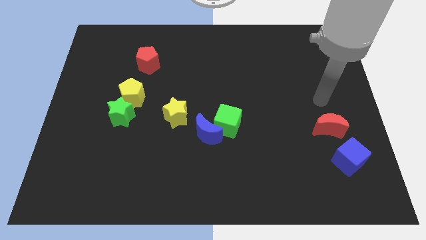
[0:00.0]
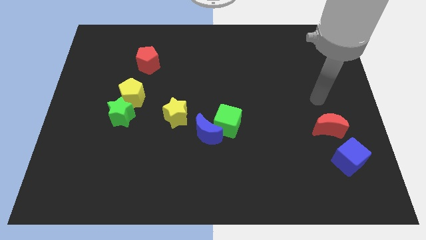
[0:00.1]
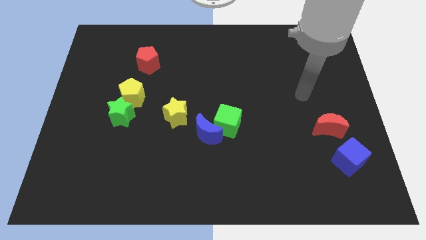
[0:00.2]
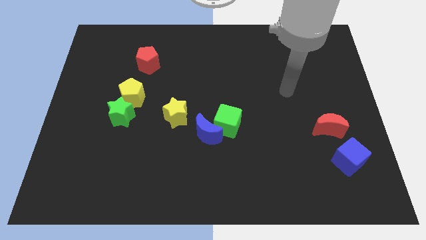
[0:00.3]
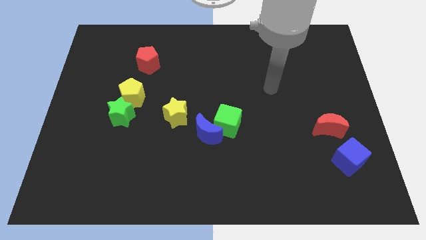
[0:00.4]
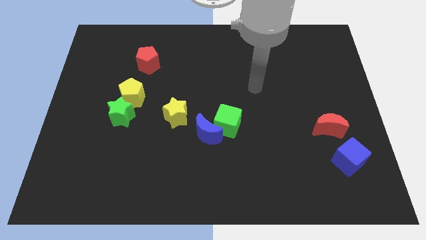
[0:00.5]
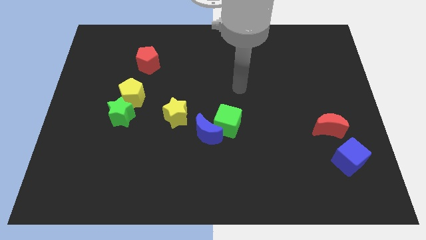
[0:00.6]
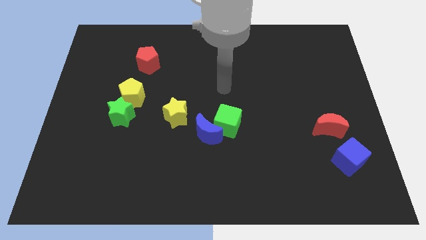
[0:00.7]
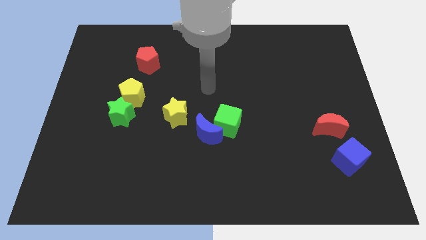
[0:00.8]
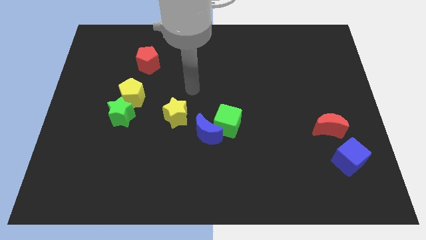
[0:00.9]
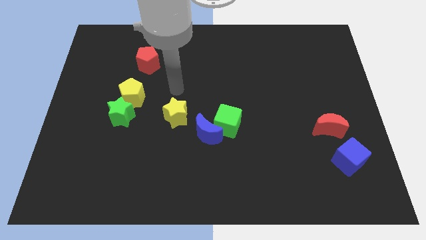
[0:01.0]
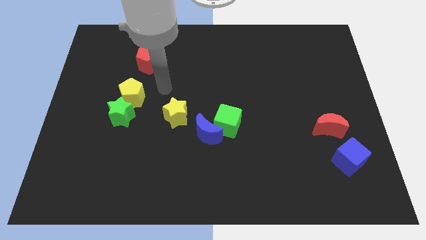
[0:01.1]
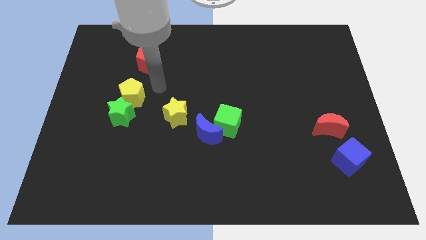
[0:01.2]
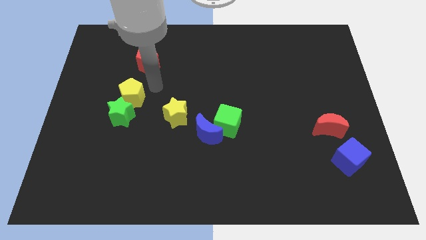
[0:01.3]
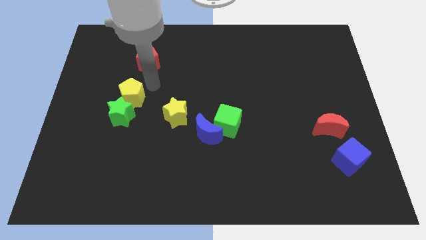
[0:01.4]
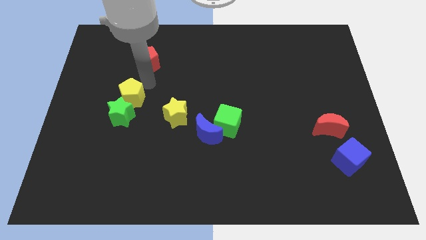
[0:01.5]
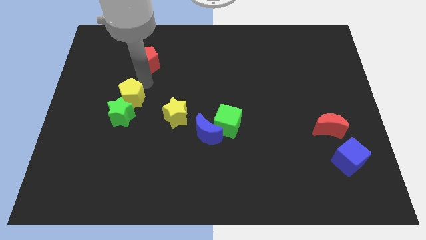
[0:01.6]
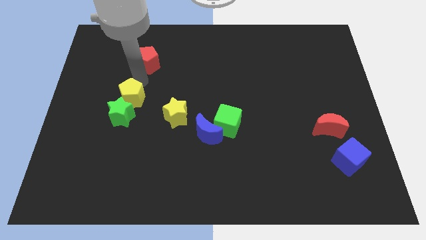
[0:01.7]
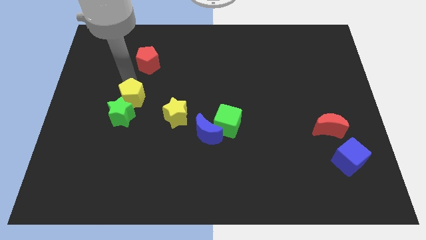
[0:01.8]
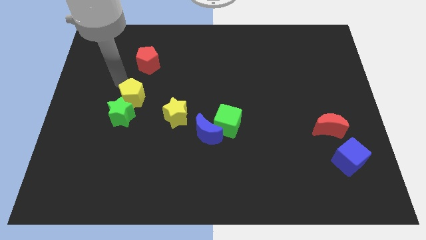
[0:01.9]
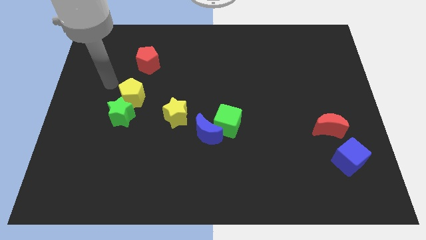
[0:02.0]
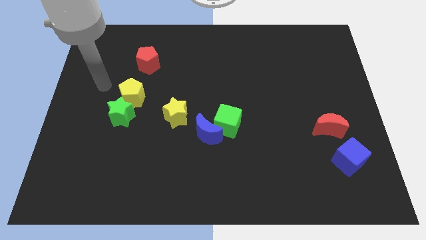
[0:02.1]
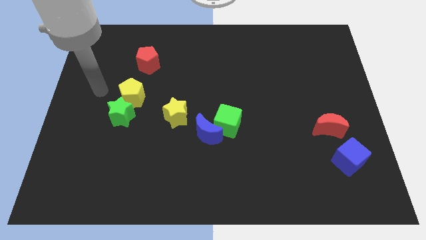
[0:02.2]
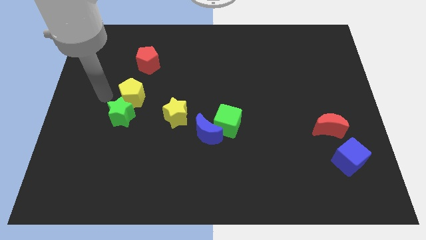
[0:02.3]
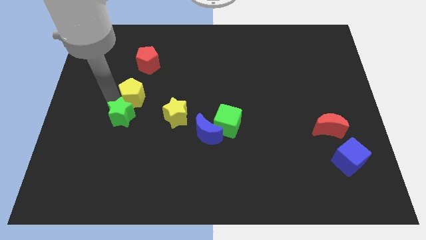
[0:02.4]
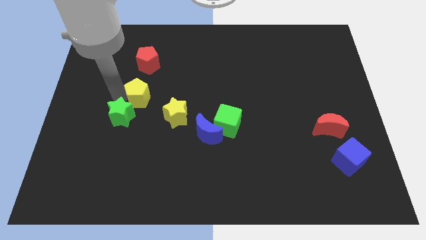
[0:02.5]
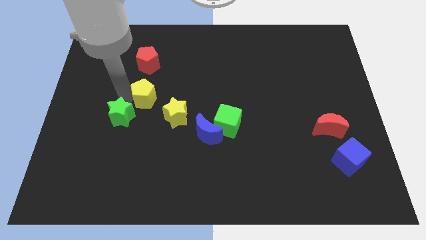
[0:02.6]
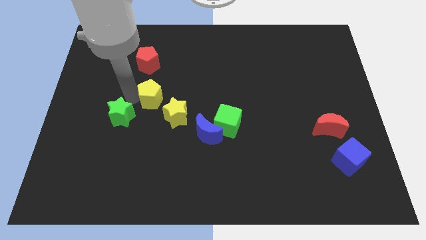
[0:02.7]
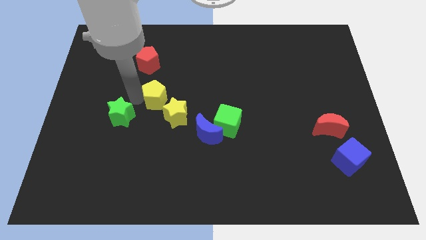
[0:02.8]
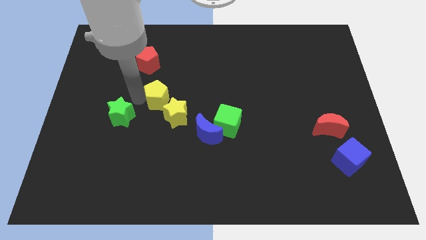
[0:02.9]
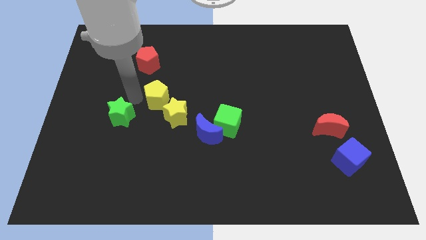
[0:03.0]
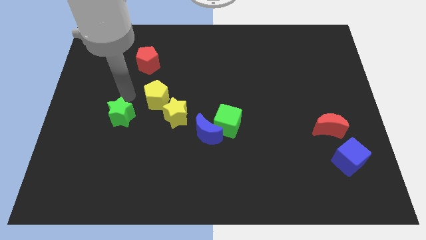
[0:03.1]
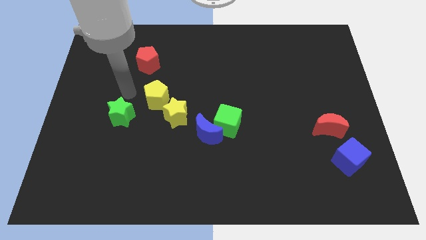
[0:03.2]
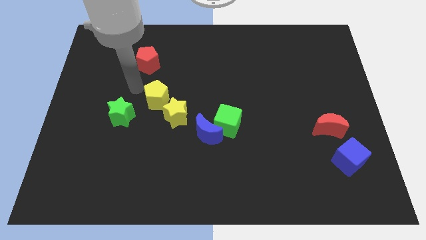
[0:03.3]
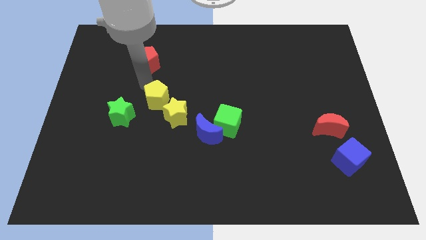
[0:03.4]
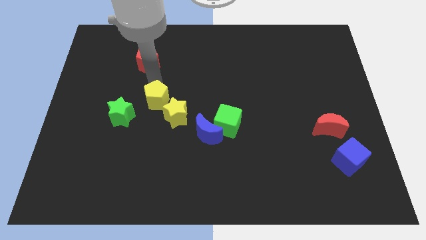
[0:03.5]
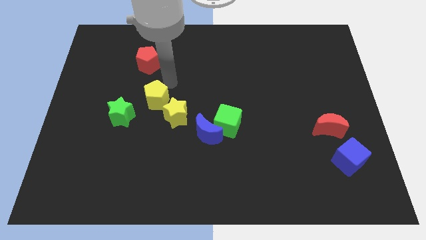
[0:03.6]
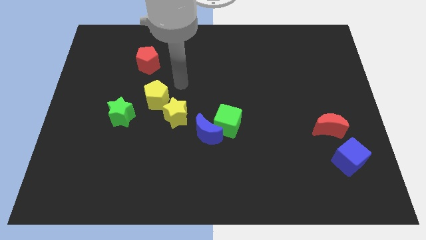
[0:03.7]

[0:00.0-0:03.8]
move the yellow pentagon diagonally top left to yellow star

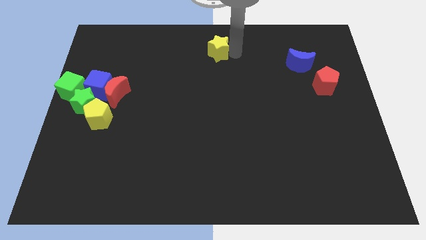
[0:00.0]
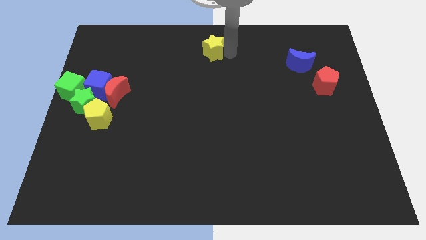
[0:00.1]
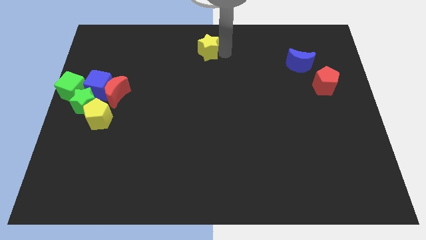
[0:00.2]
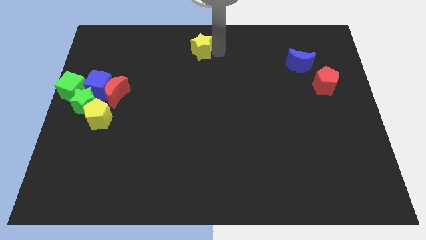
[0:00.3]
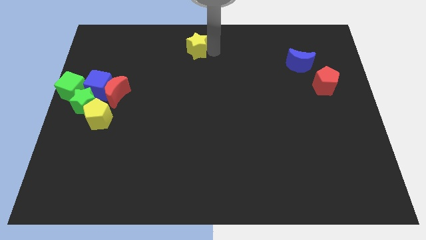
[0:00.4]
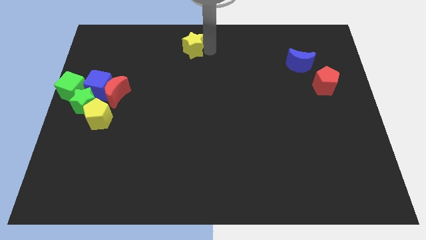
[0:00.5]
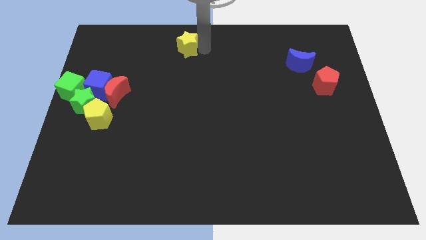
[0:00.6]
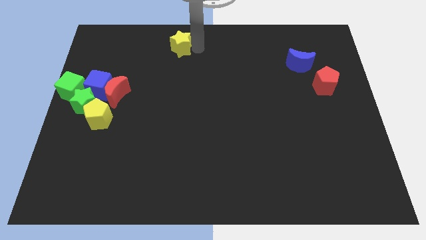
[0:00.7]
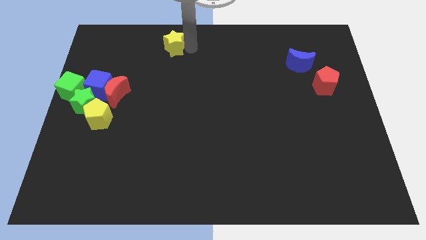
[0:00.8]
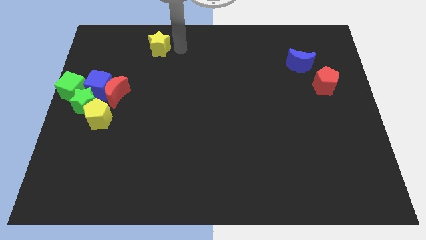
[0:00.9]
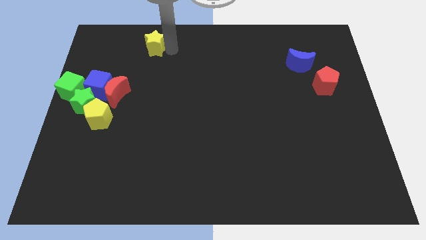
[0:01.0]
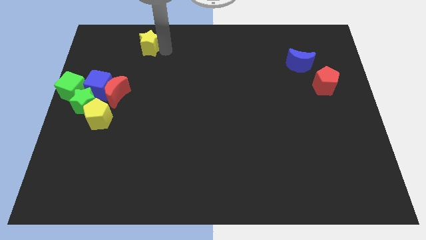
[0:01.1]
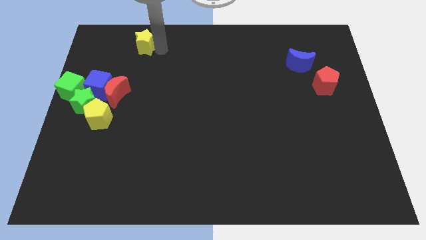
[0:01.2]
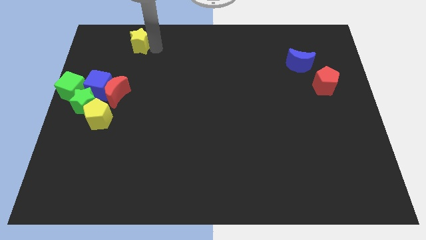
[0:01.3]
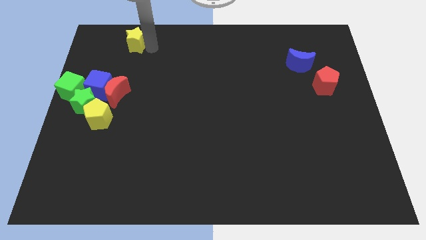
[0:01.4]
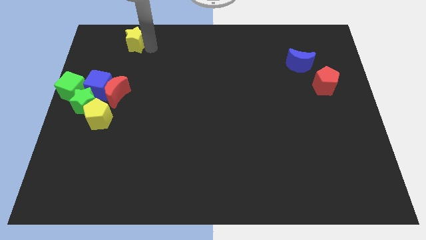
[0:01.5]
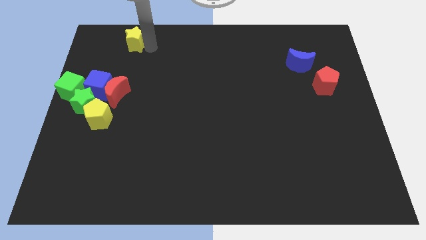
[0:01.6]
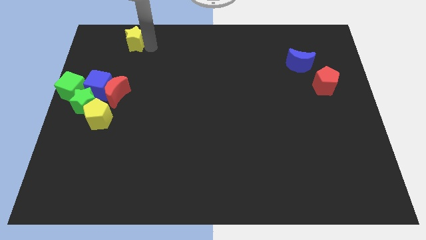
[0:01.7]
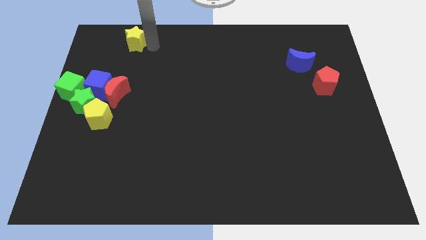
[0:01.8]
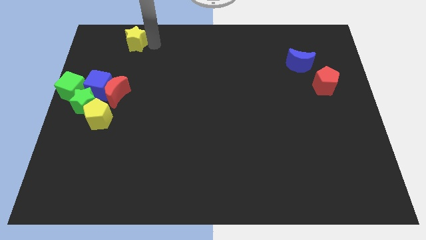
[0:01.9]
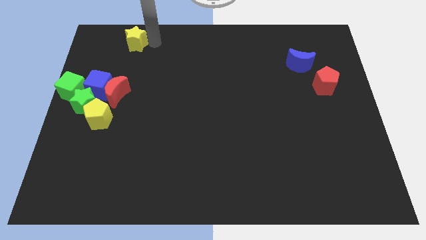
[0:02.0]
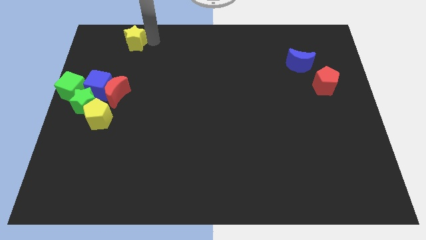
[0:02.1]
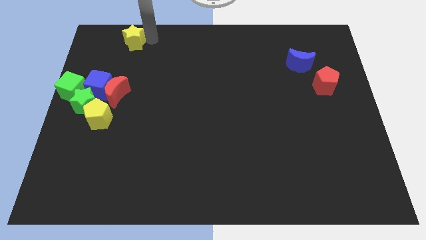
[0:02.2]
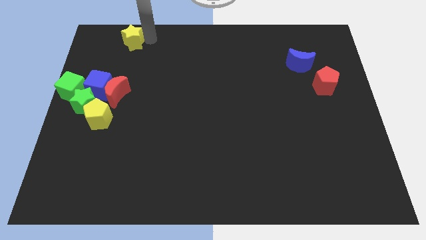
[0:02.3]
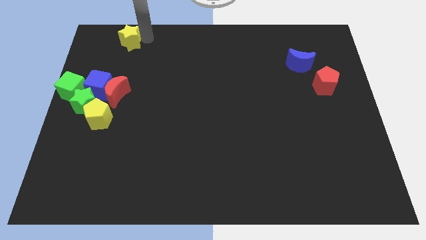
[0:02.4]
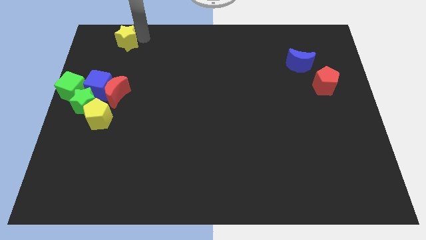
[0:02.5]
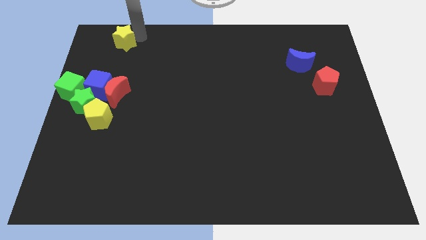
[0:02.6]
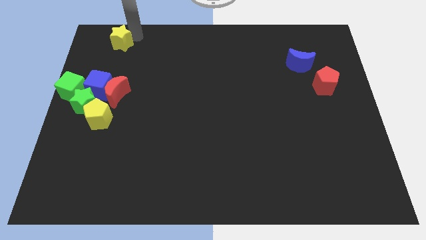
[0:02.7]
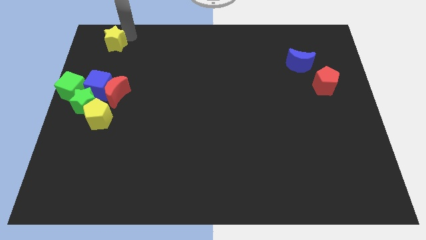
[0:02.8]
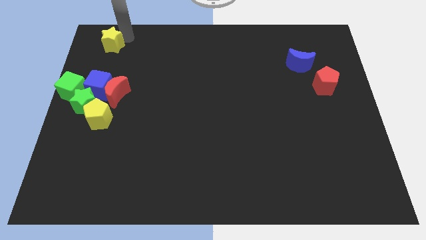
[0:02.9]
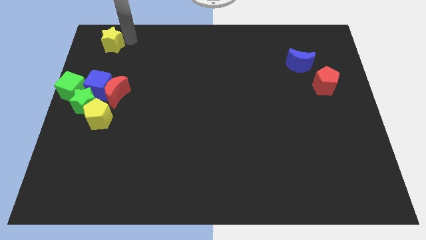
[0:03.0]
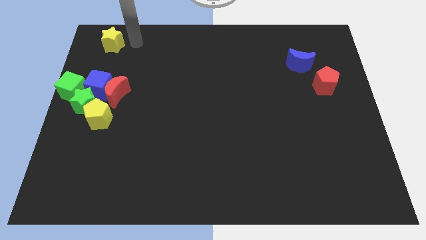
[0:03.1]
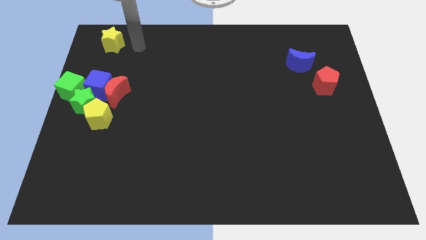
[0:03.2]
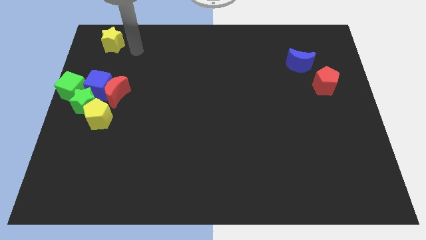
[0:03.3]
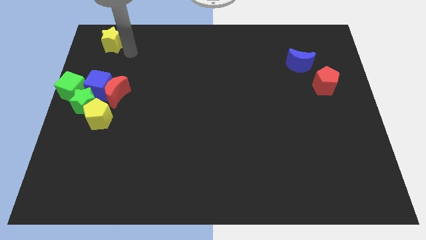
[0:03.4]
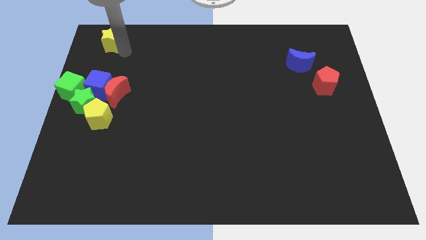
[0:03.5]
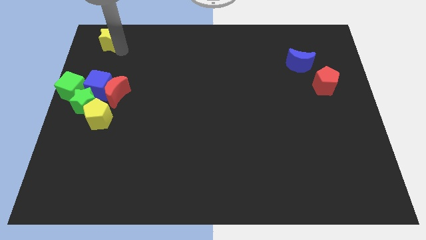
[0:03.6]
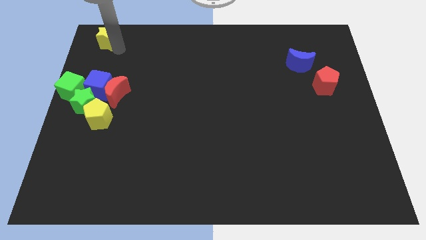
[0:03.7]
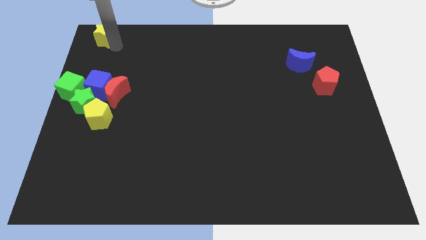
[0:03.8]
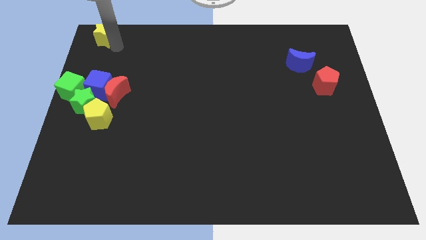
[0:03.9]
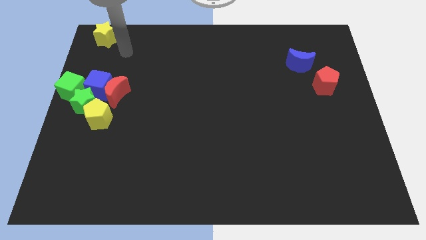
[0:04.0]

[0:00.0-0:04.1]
push the yellow star to the top left of the board

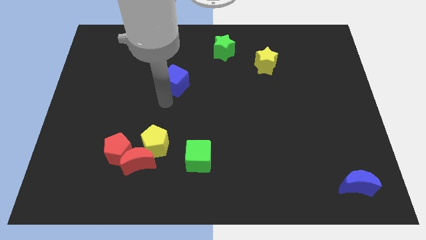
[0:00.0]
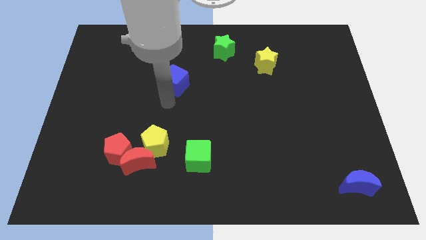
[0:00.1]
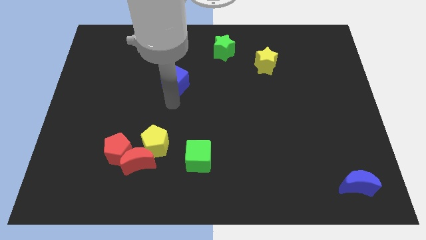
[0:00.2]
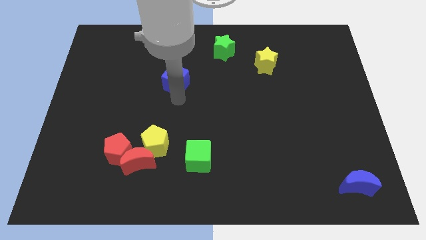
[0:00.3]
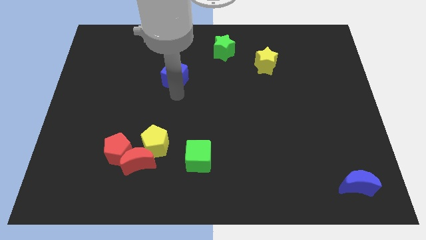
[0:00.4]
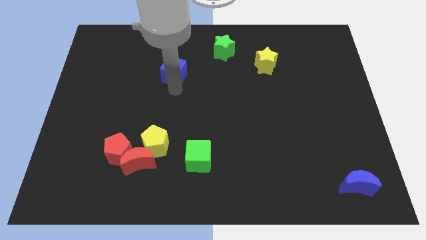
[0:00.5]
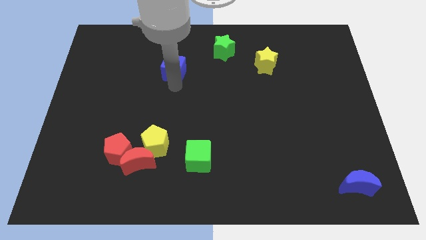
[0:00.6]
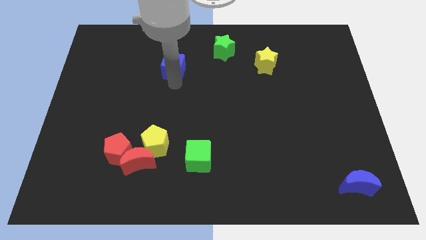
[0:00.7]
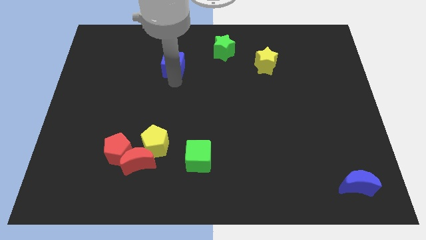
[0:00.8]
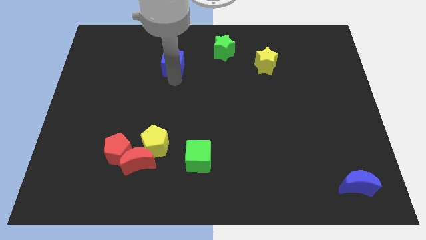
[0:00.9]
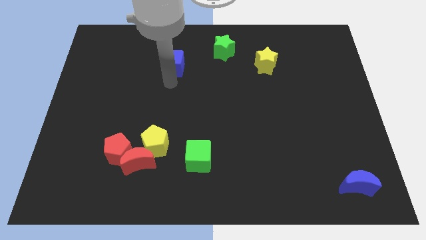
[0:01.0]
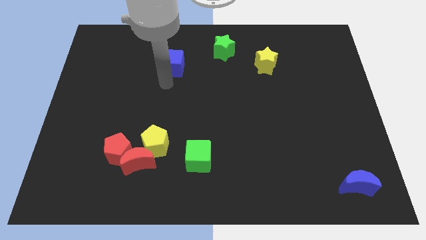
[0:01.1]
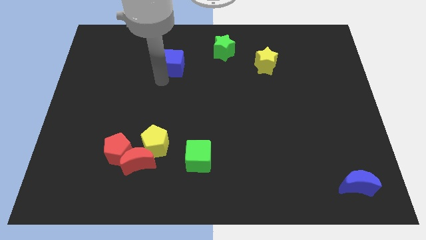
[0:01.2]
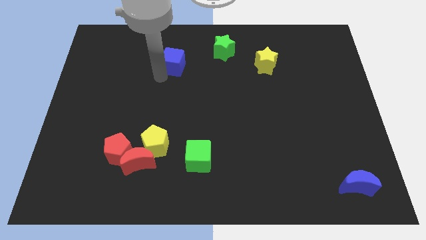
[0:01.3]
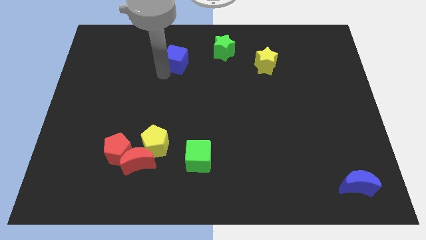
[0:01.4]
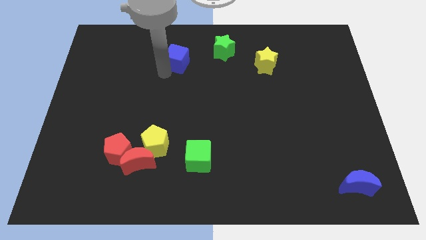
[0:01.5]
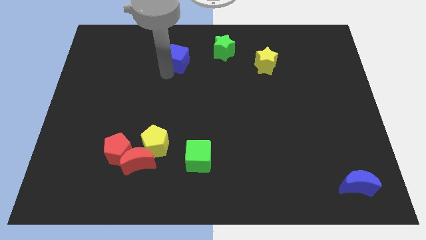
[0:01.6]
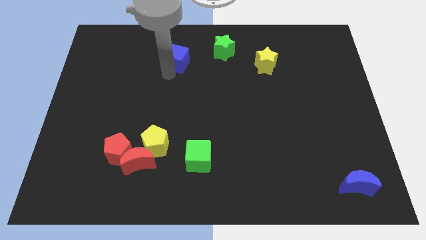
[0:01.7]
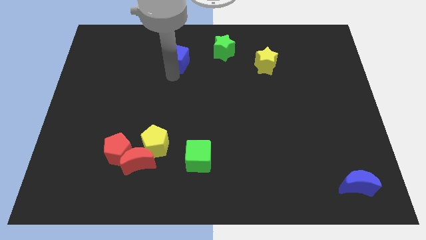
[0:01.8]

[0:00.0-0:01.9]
slide the blue cube slightly towards up
